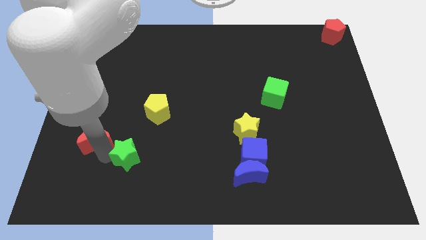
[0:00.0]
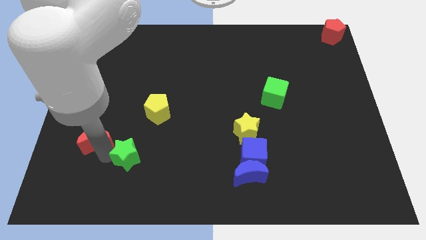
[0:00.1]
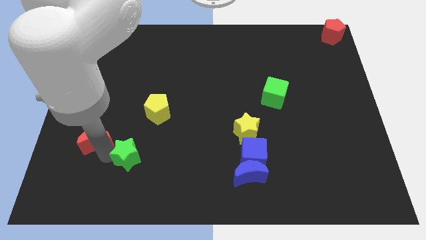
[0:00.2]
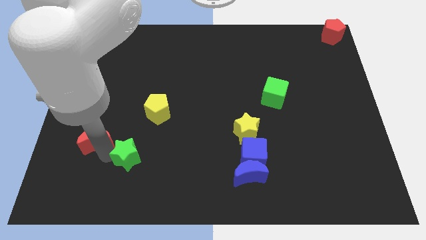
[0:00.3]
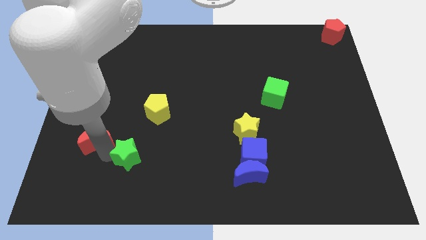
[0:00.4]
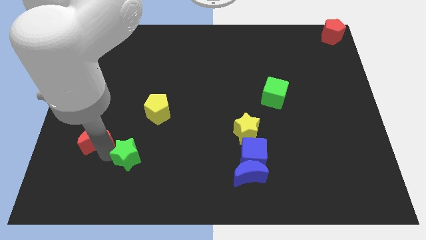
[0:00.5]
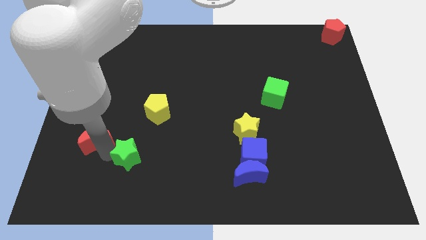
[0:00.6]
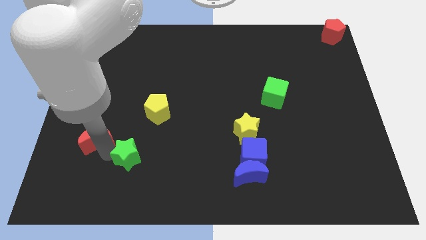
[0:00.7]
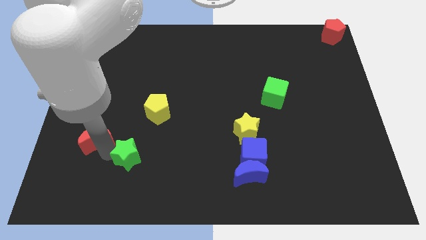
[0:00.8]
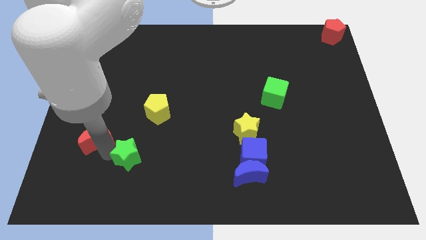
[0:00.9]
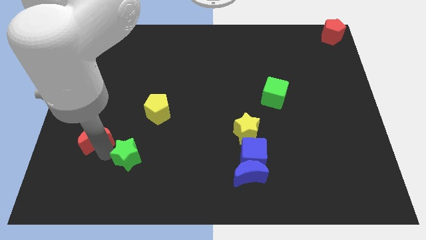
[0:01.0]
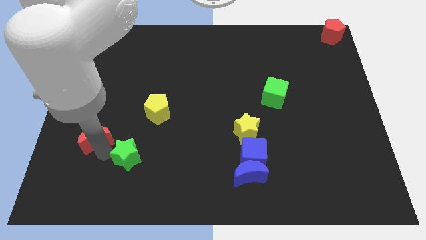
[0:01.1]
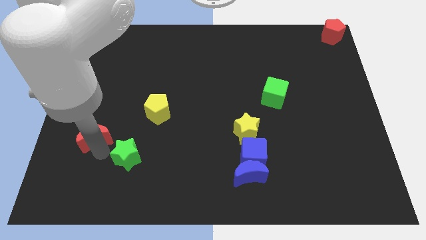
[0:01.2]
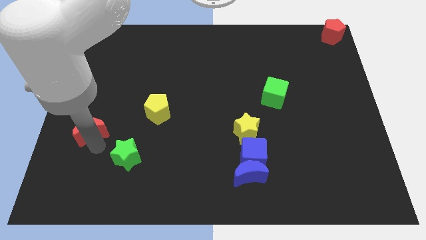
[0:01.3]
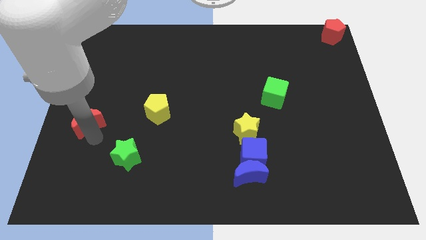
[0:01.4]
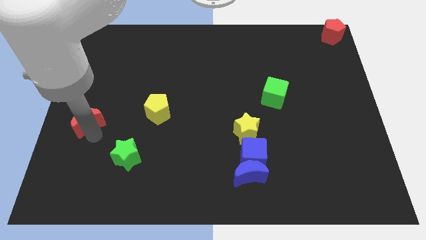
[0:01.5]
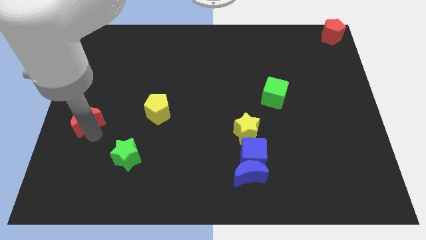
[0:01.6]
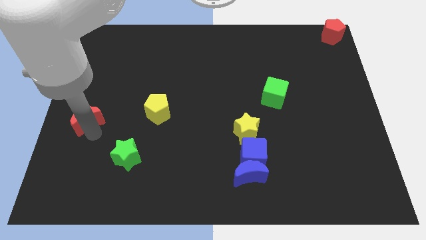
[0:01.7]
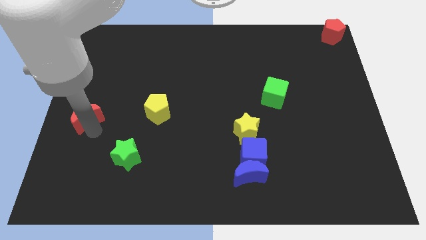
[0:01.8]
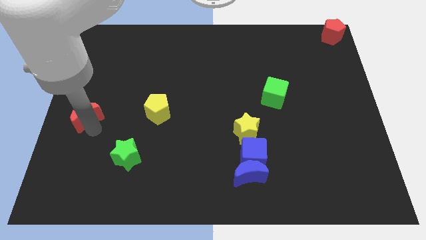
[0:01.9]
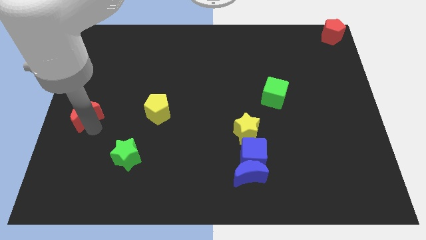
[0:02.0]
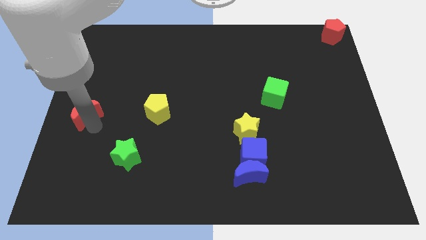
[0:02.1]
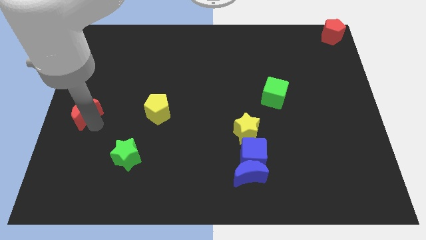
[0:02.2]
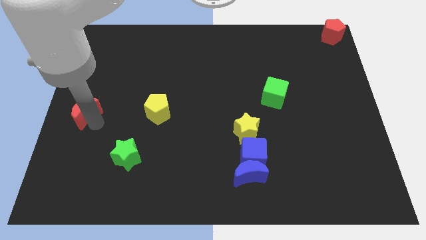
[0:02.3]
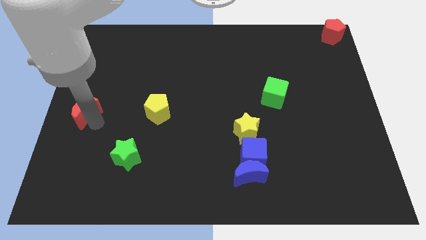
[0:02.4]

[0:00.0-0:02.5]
separate the red crescent and the green star

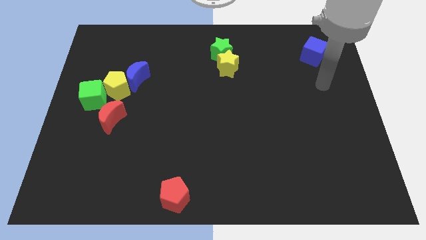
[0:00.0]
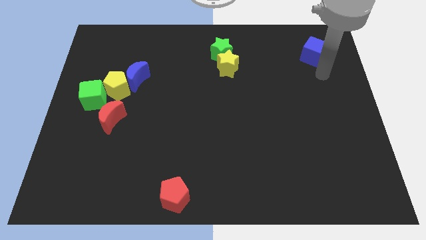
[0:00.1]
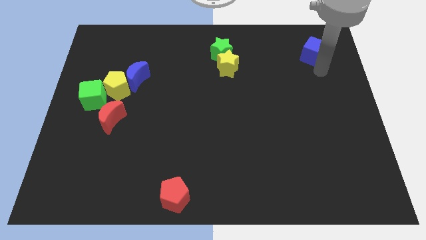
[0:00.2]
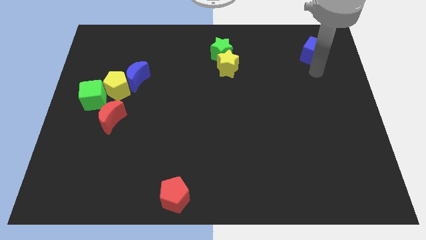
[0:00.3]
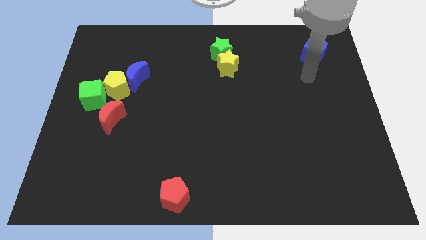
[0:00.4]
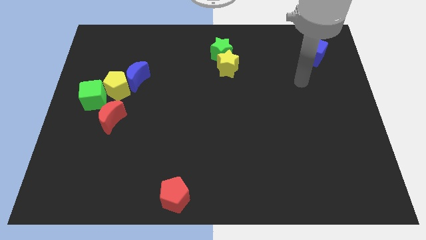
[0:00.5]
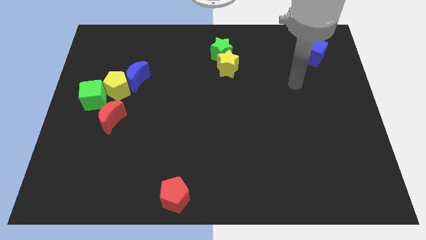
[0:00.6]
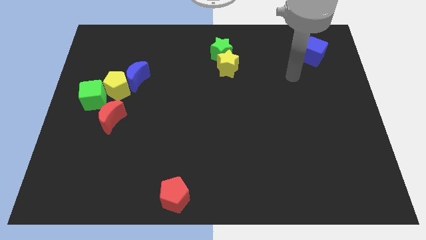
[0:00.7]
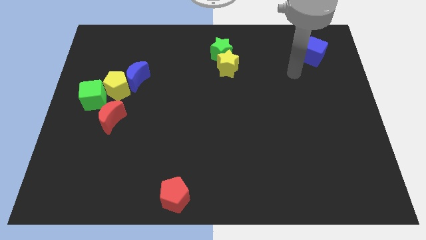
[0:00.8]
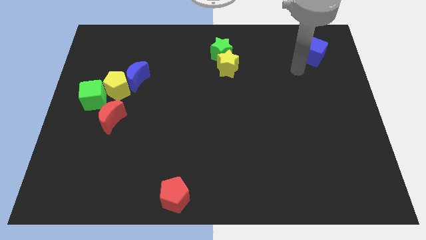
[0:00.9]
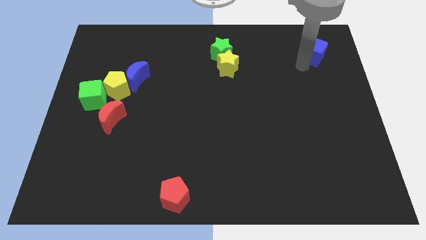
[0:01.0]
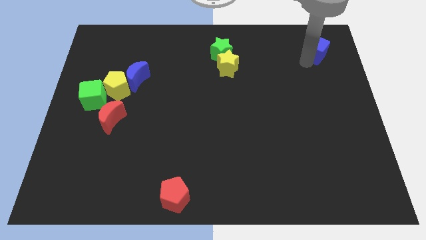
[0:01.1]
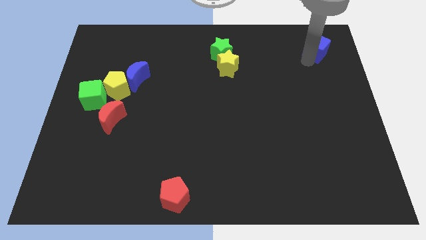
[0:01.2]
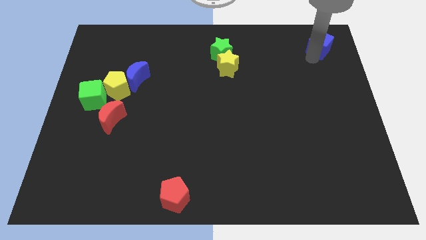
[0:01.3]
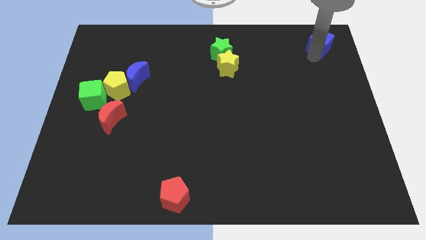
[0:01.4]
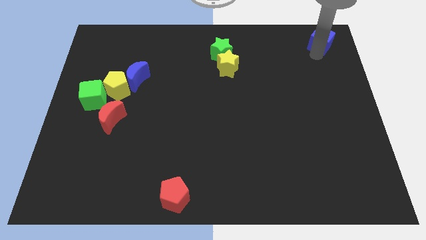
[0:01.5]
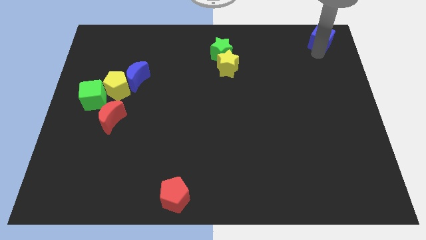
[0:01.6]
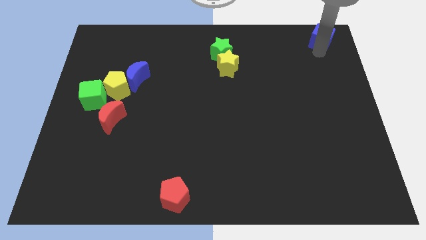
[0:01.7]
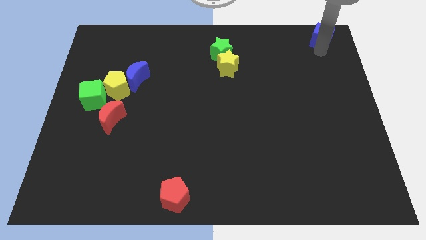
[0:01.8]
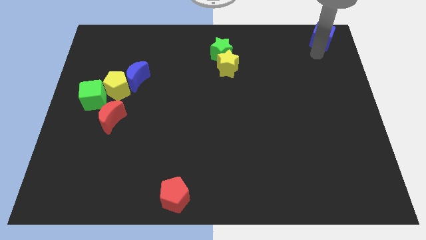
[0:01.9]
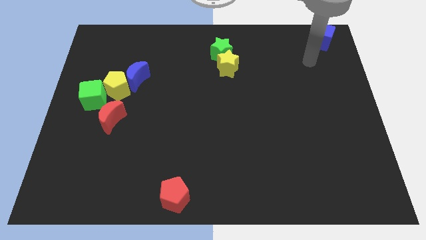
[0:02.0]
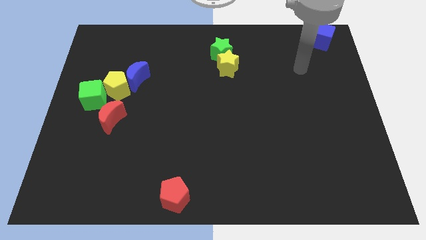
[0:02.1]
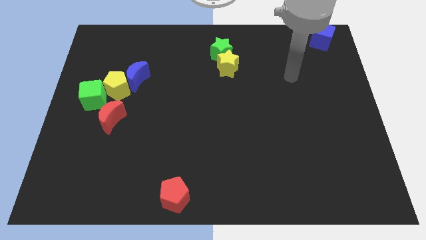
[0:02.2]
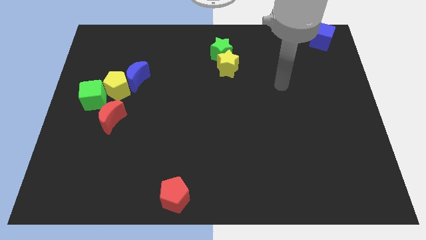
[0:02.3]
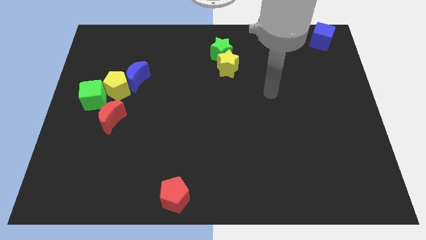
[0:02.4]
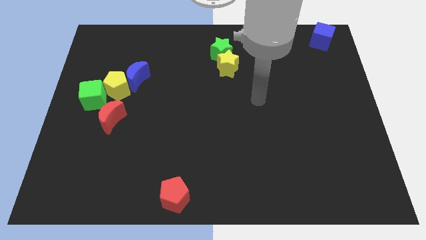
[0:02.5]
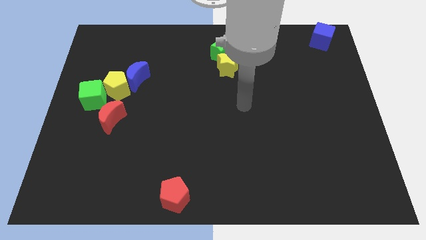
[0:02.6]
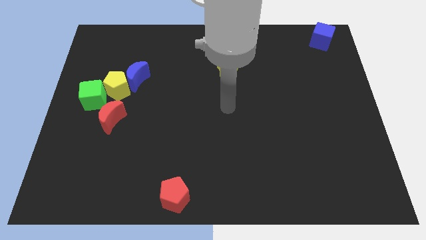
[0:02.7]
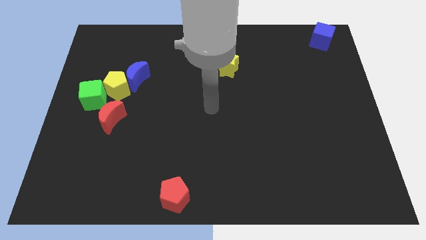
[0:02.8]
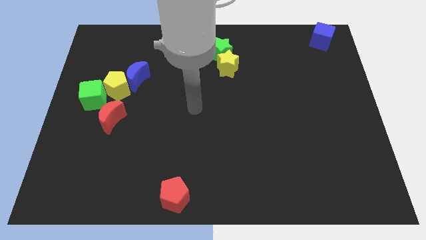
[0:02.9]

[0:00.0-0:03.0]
move the blue cube to the top right corner of the board

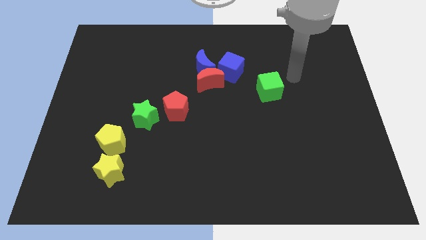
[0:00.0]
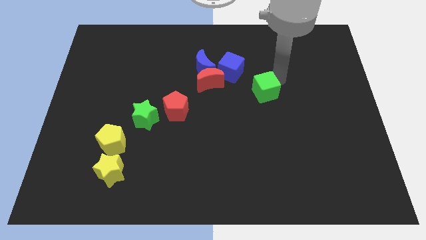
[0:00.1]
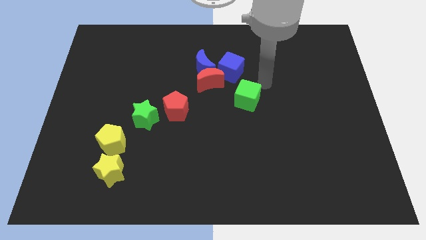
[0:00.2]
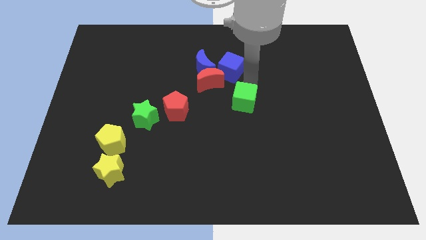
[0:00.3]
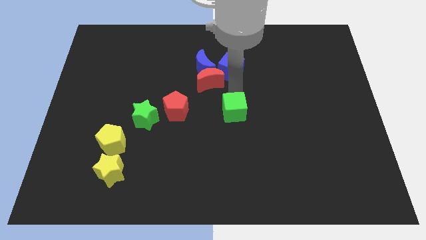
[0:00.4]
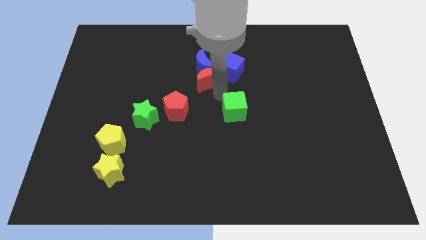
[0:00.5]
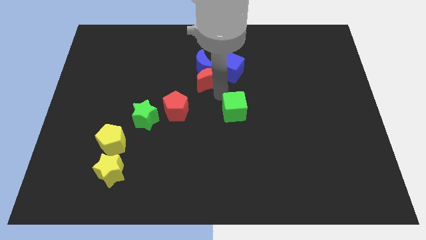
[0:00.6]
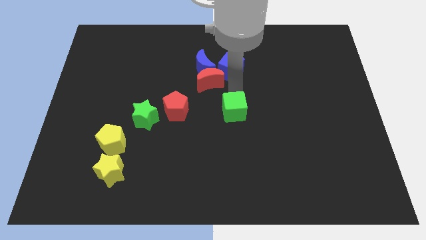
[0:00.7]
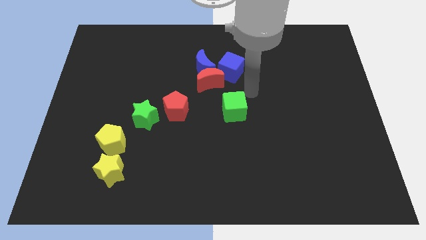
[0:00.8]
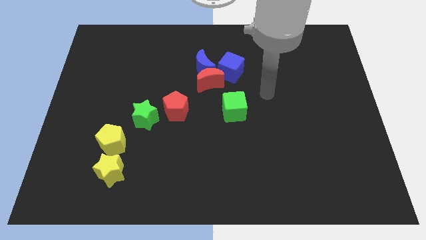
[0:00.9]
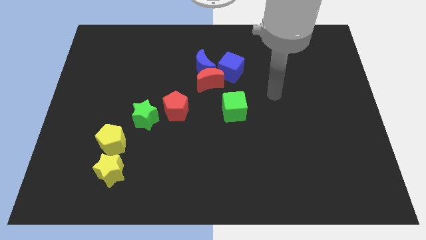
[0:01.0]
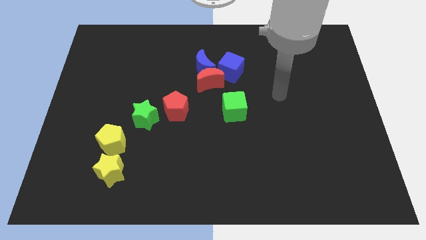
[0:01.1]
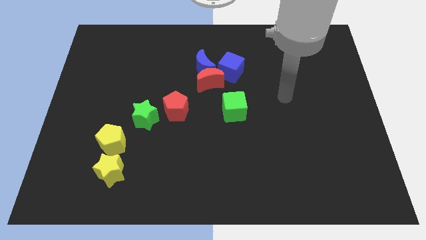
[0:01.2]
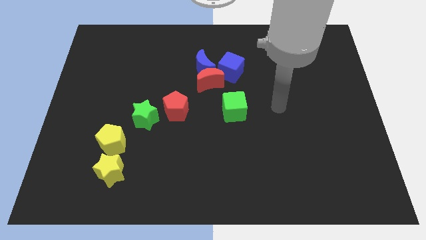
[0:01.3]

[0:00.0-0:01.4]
push the green cube to the center of the board

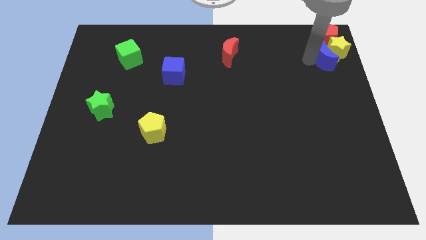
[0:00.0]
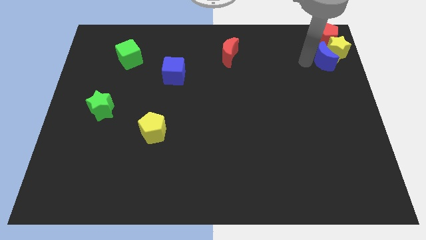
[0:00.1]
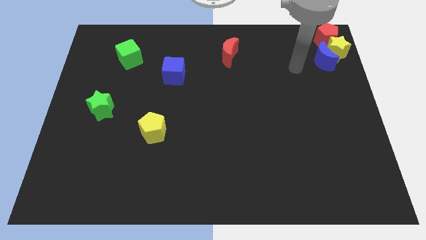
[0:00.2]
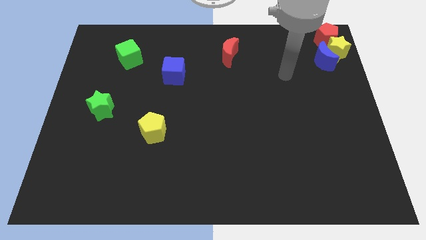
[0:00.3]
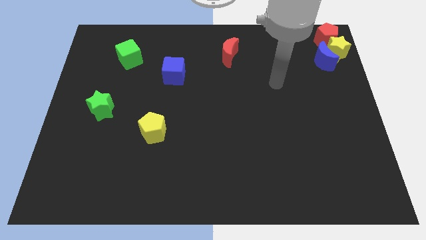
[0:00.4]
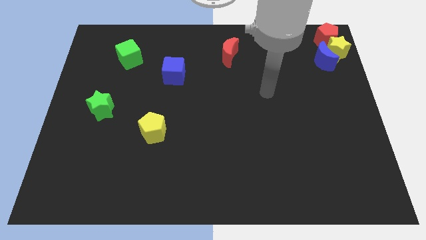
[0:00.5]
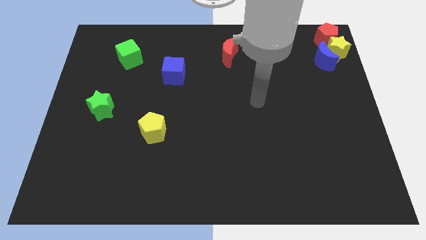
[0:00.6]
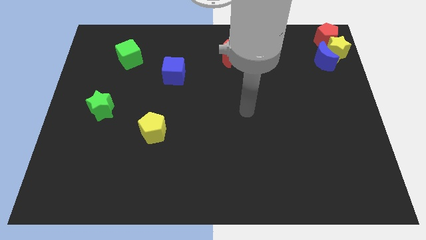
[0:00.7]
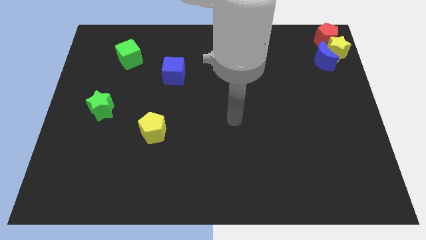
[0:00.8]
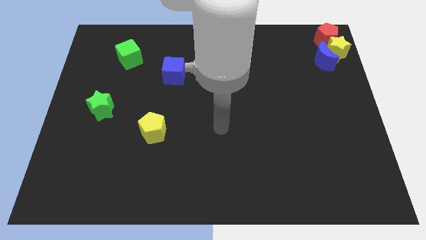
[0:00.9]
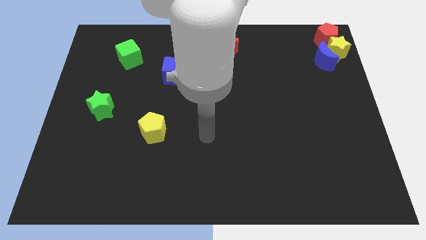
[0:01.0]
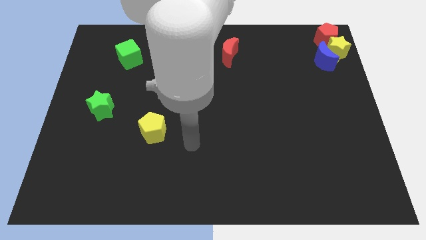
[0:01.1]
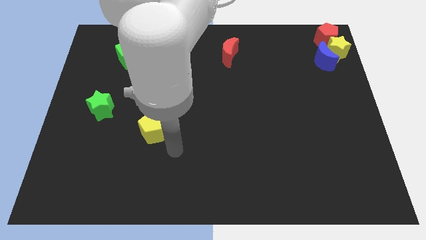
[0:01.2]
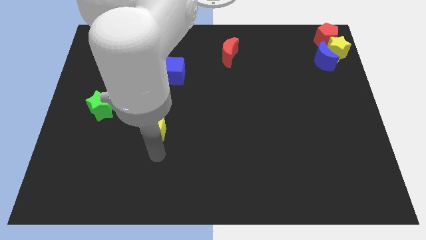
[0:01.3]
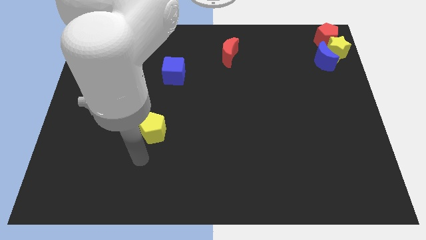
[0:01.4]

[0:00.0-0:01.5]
move your arm away from the blue moon

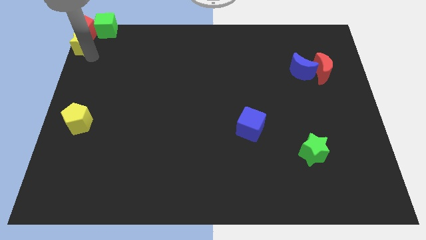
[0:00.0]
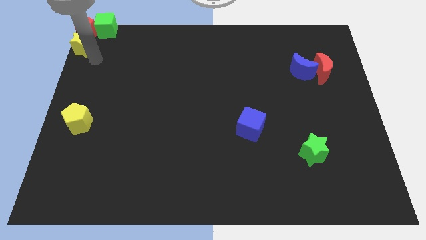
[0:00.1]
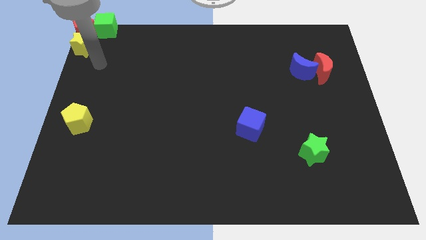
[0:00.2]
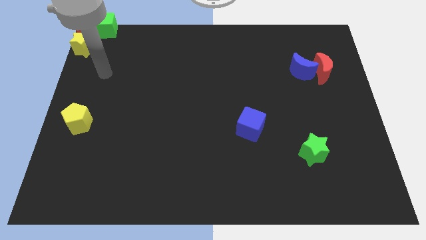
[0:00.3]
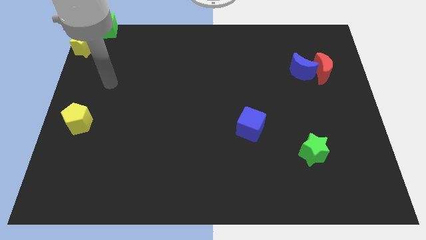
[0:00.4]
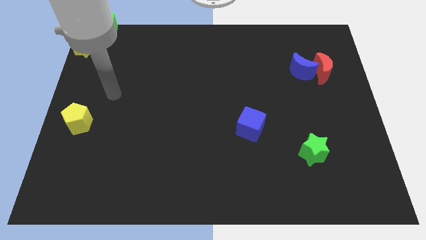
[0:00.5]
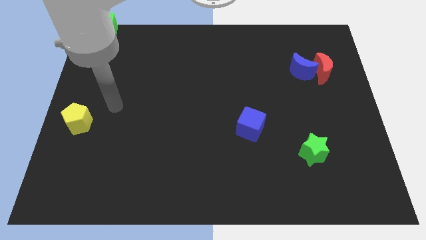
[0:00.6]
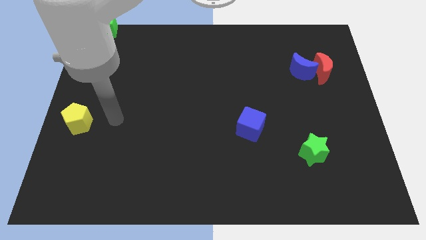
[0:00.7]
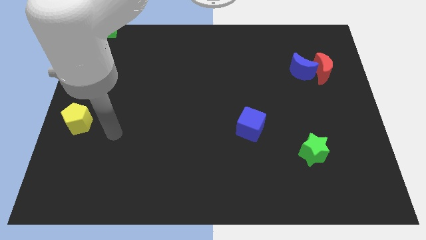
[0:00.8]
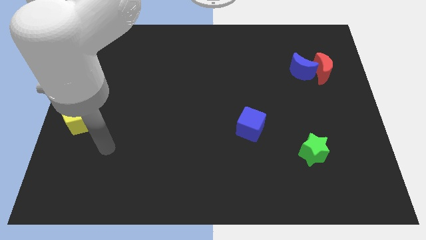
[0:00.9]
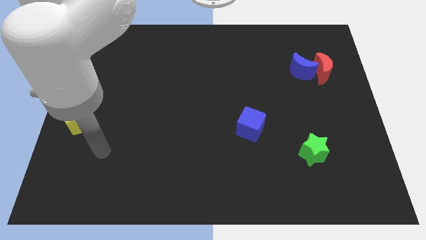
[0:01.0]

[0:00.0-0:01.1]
move the arm downwards the yellow pentagon
